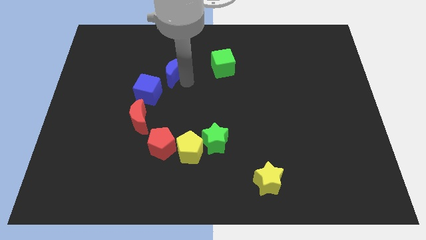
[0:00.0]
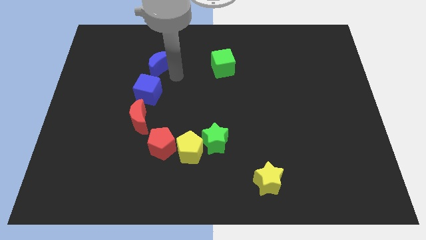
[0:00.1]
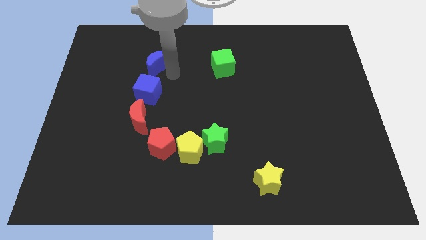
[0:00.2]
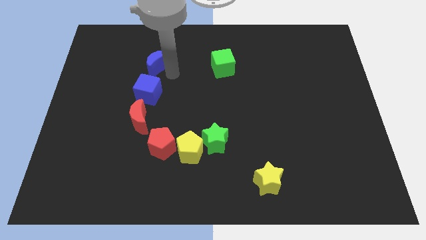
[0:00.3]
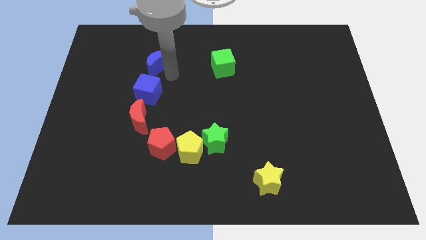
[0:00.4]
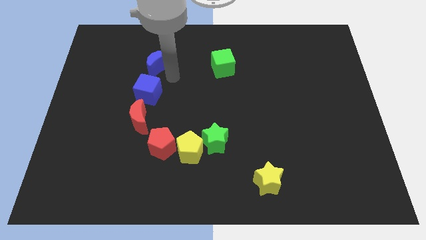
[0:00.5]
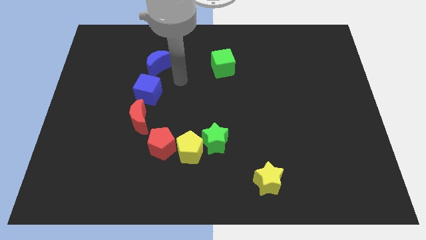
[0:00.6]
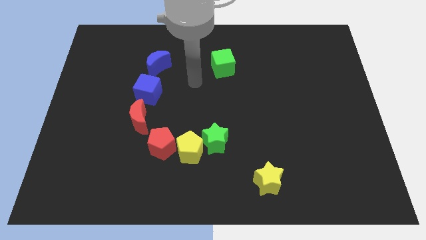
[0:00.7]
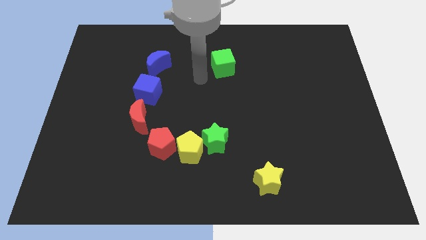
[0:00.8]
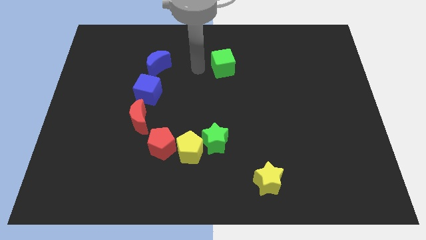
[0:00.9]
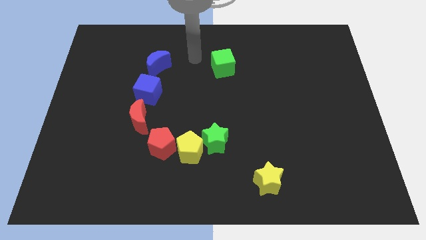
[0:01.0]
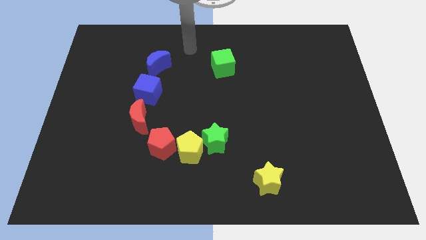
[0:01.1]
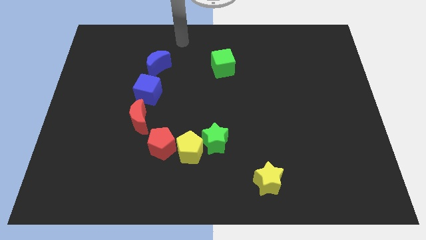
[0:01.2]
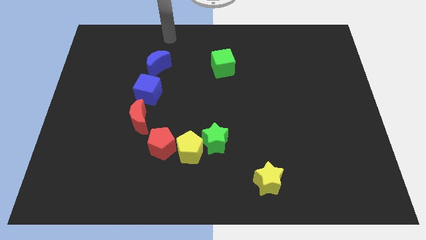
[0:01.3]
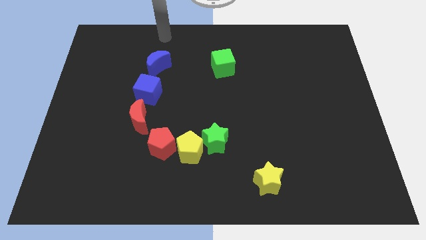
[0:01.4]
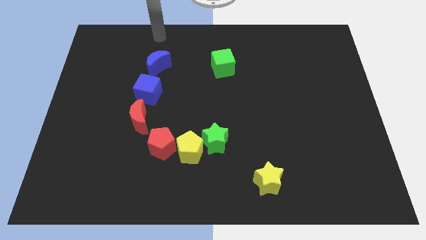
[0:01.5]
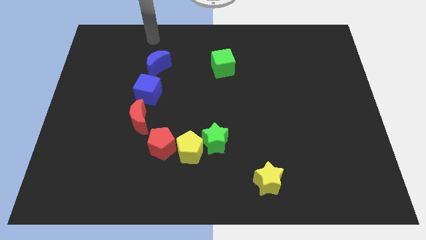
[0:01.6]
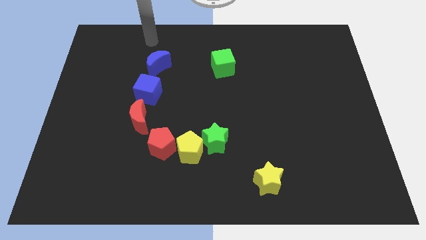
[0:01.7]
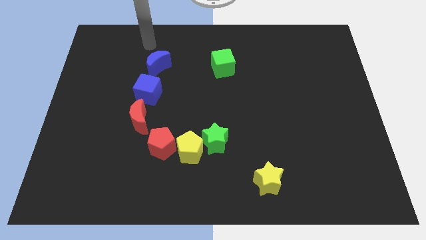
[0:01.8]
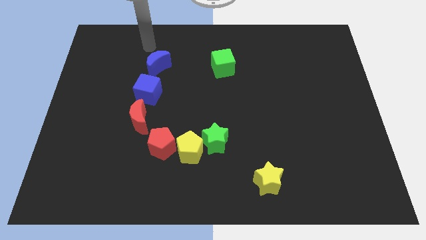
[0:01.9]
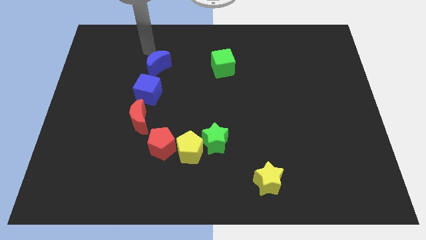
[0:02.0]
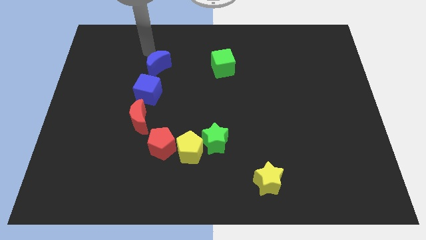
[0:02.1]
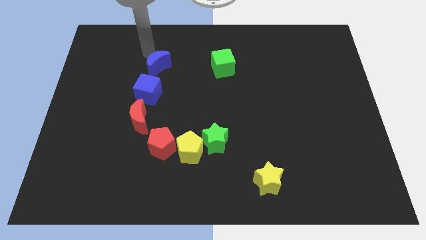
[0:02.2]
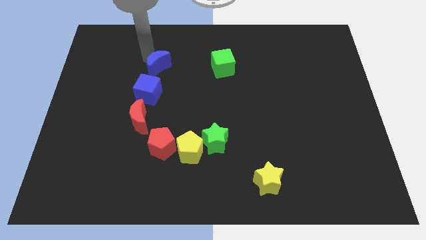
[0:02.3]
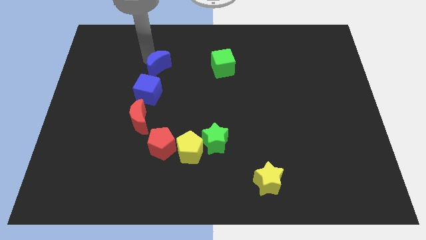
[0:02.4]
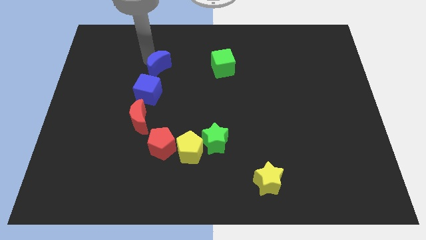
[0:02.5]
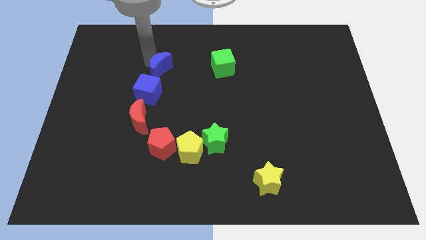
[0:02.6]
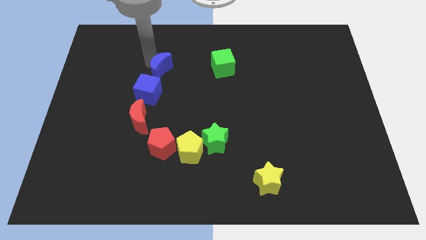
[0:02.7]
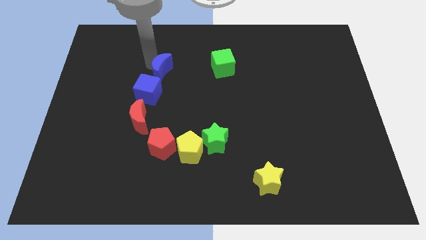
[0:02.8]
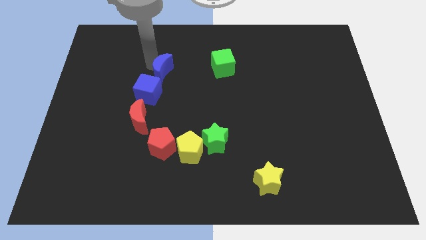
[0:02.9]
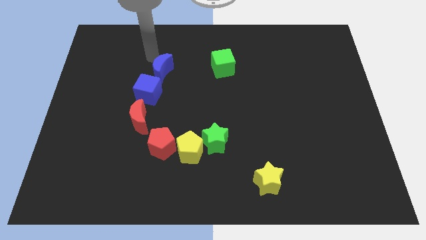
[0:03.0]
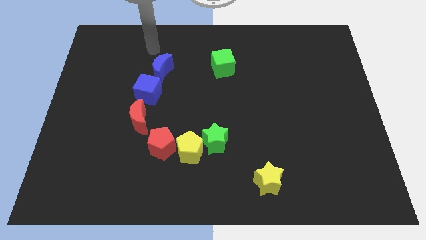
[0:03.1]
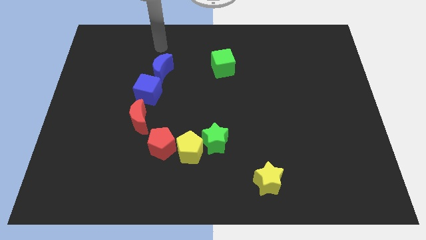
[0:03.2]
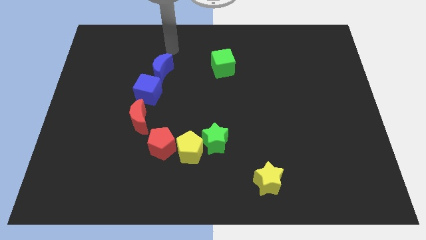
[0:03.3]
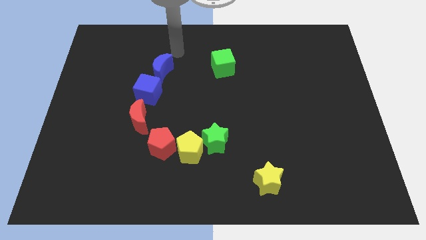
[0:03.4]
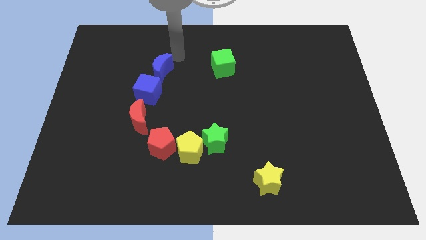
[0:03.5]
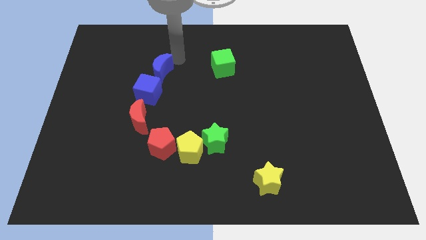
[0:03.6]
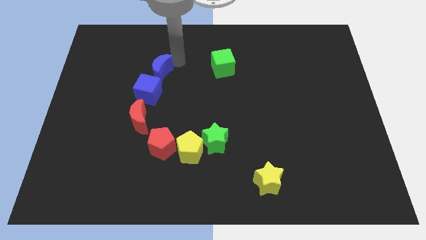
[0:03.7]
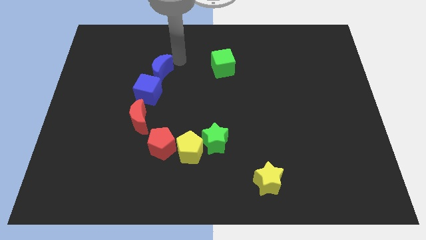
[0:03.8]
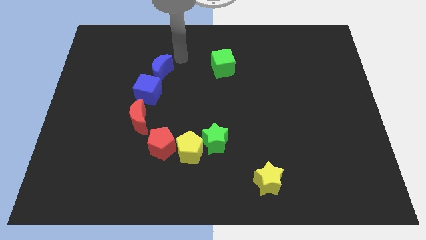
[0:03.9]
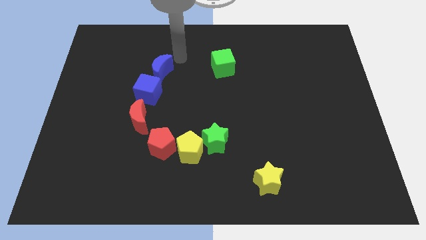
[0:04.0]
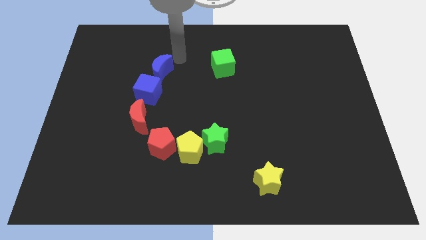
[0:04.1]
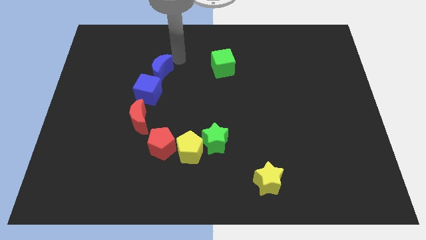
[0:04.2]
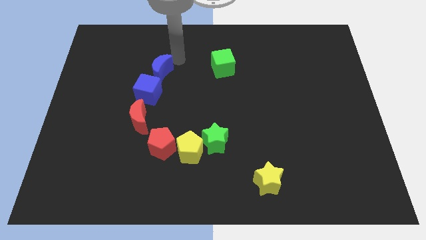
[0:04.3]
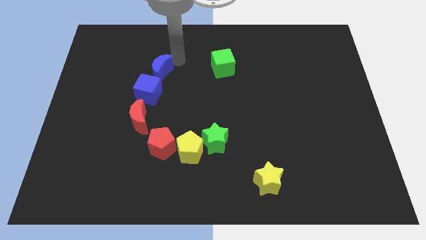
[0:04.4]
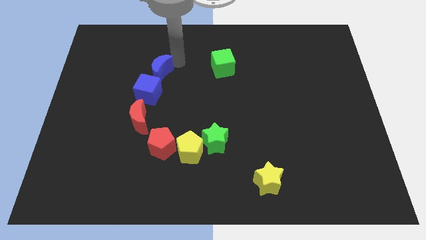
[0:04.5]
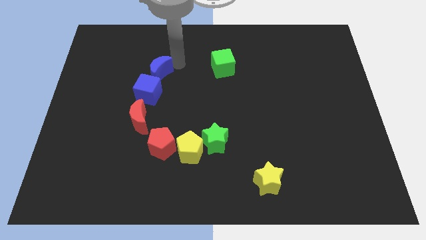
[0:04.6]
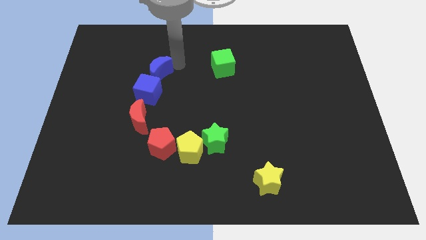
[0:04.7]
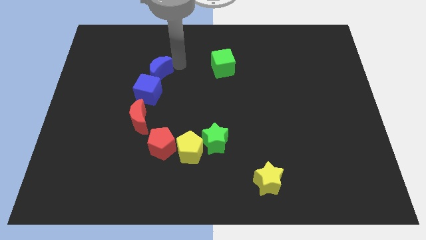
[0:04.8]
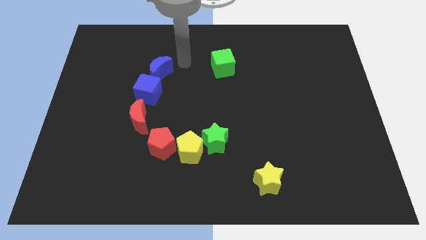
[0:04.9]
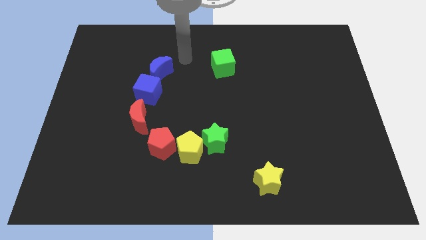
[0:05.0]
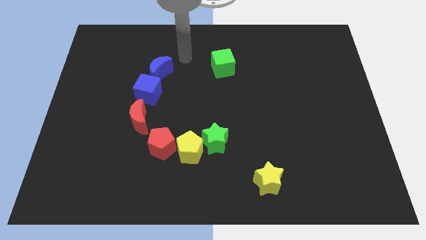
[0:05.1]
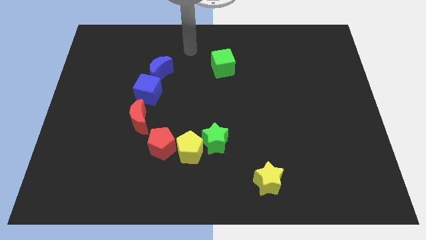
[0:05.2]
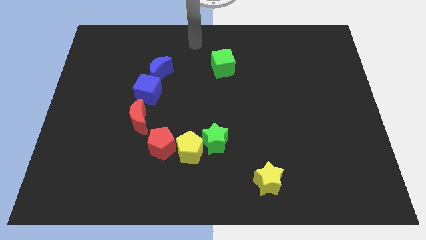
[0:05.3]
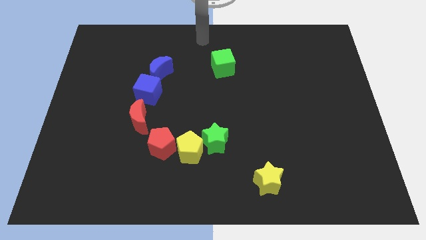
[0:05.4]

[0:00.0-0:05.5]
move the blue moon into the blue cube

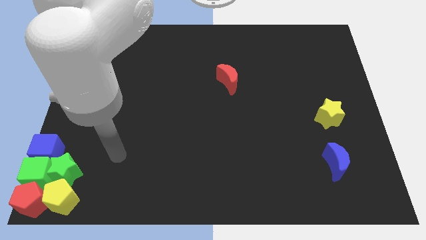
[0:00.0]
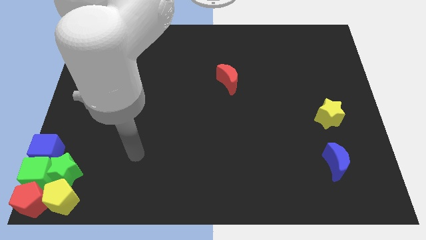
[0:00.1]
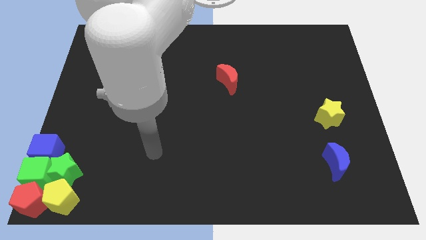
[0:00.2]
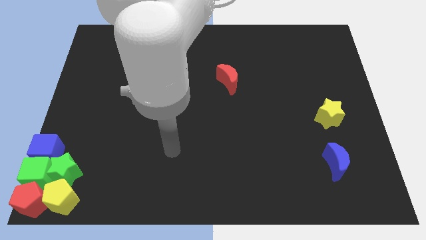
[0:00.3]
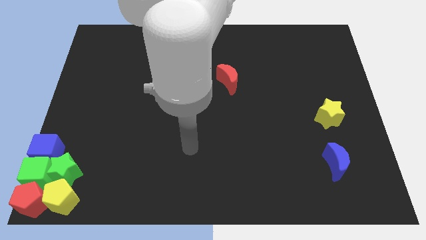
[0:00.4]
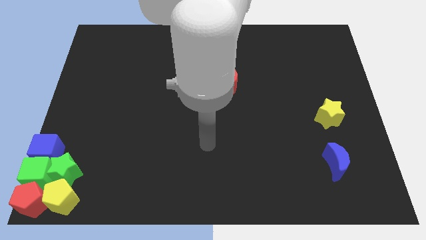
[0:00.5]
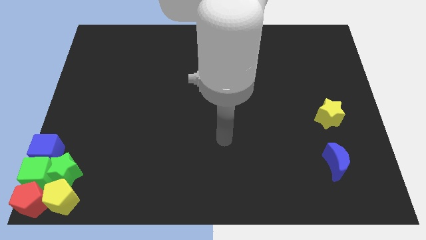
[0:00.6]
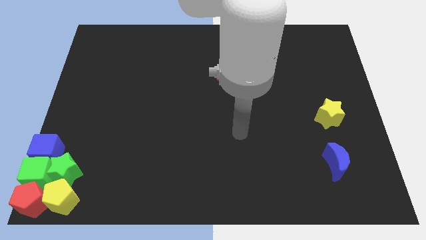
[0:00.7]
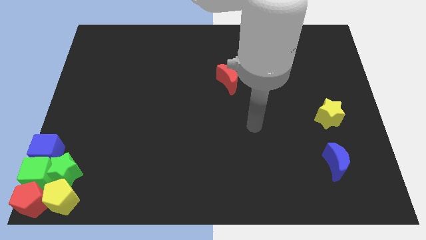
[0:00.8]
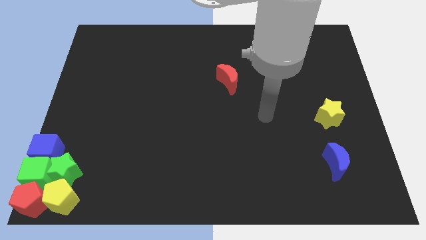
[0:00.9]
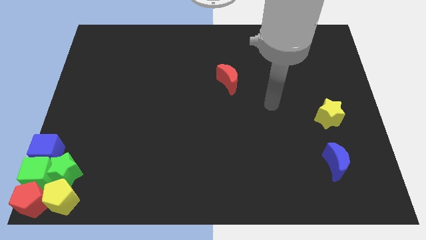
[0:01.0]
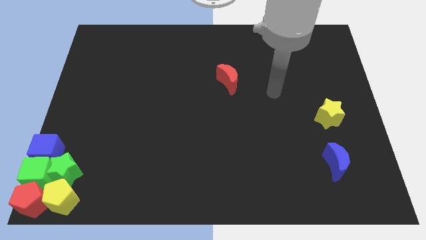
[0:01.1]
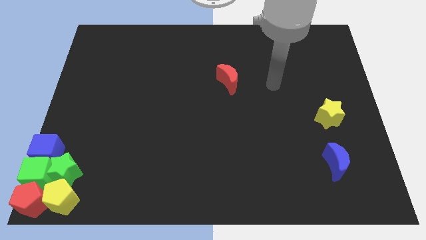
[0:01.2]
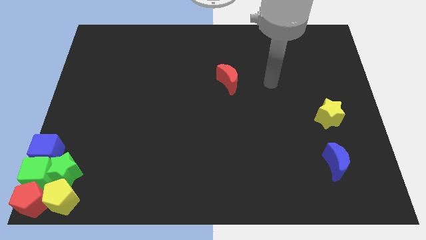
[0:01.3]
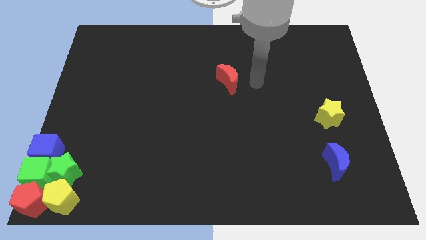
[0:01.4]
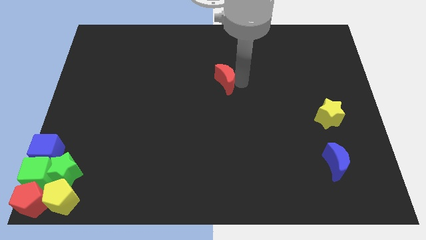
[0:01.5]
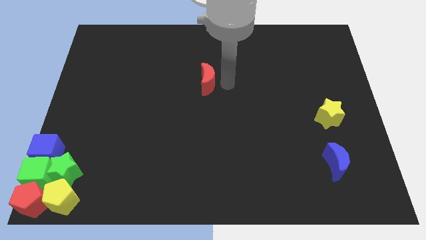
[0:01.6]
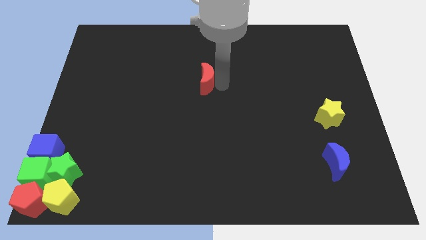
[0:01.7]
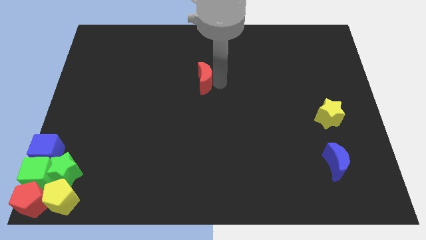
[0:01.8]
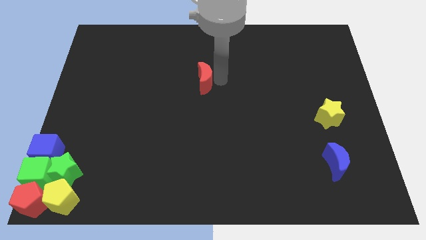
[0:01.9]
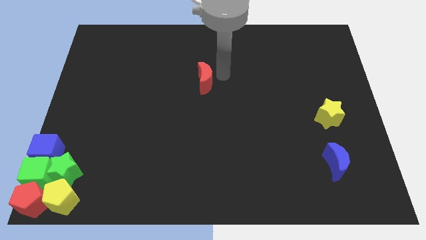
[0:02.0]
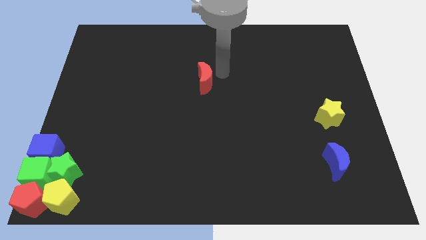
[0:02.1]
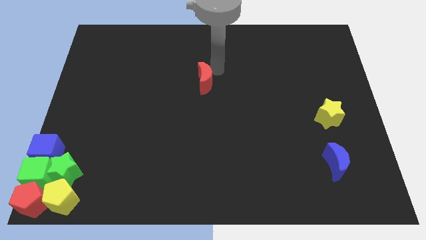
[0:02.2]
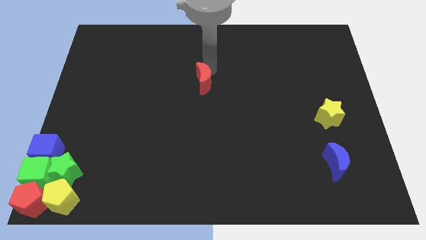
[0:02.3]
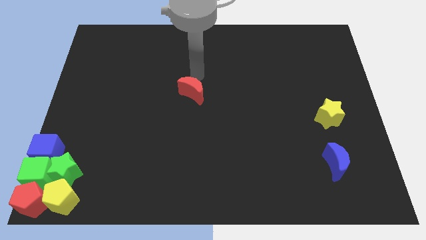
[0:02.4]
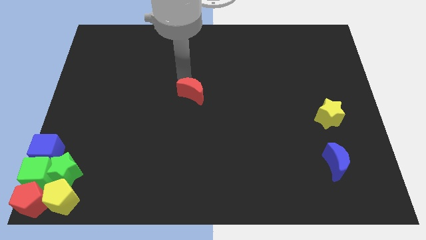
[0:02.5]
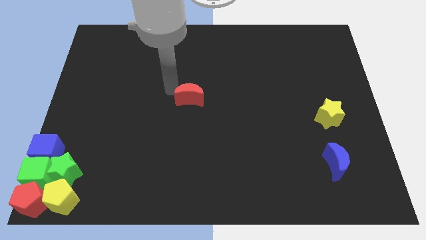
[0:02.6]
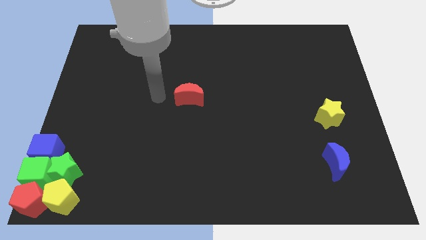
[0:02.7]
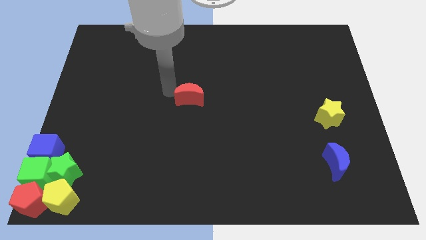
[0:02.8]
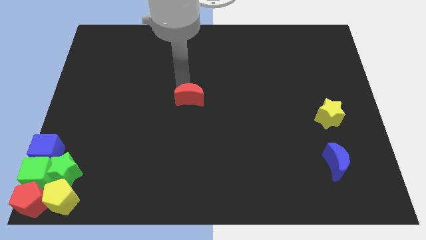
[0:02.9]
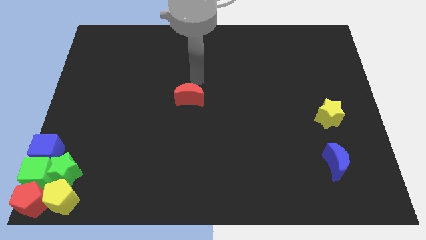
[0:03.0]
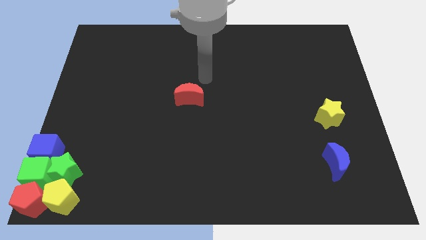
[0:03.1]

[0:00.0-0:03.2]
move the red moon to the center

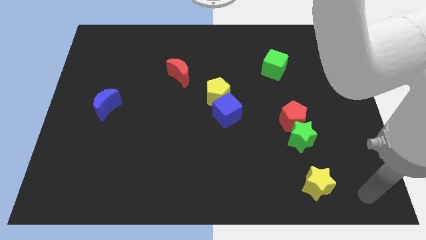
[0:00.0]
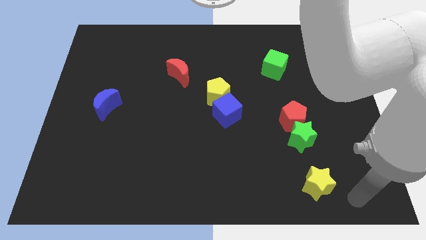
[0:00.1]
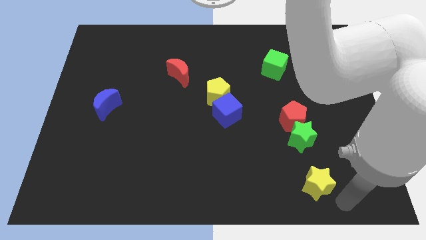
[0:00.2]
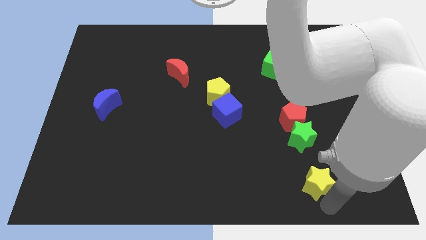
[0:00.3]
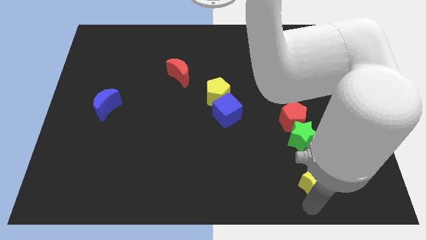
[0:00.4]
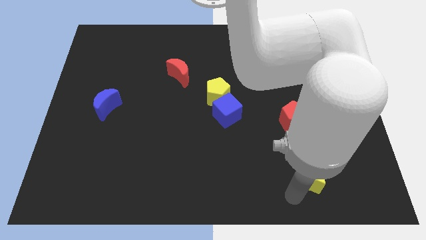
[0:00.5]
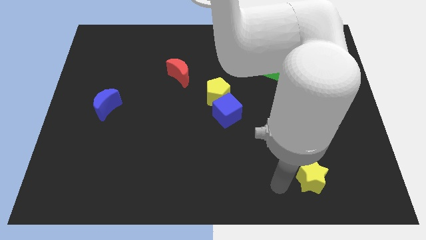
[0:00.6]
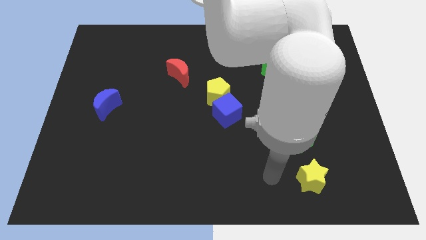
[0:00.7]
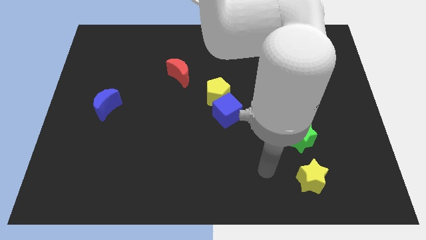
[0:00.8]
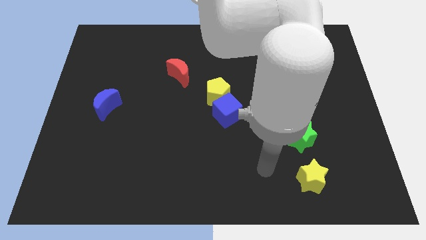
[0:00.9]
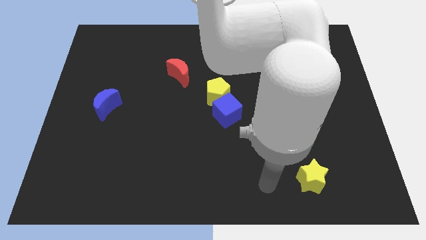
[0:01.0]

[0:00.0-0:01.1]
move the yellow star slightly below the green star
